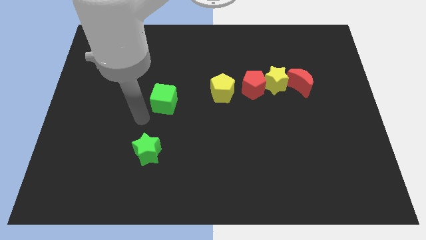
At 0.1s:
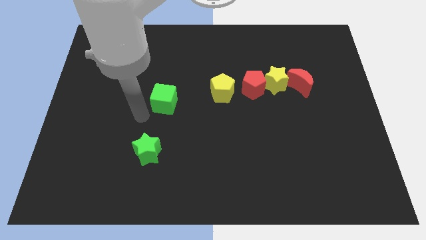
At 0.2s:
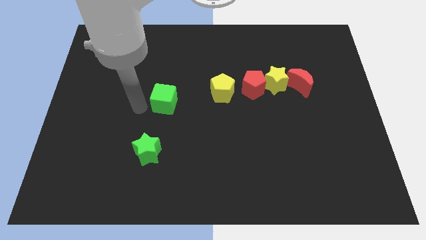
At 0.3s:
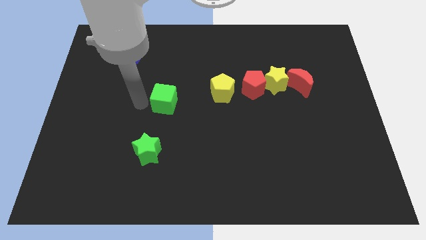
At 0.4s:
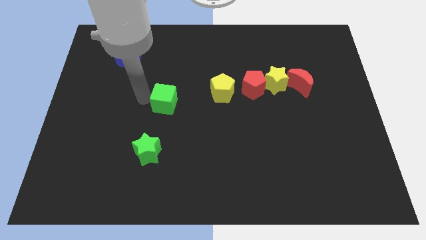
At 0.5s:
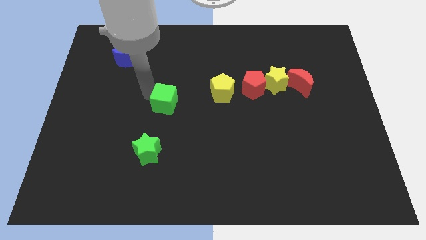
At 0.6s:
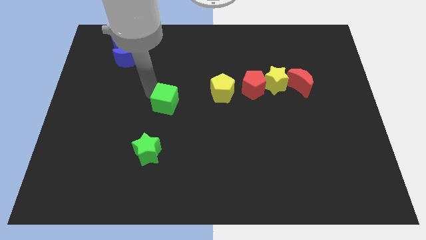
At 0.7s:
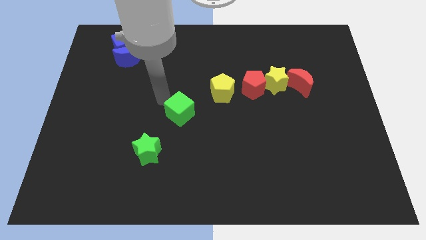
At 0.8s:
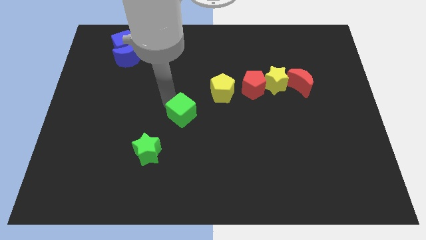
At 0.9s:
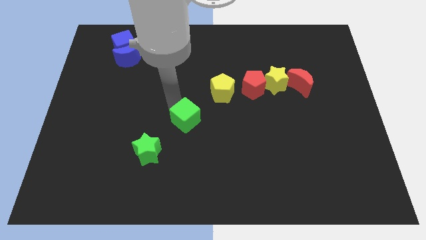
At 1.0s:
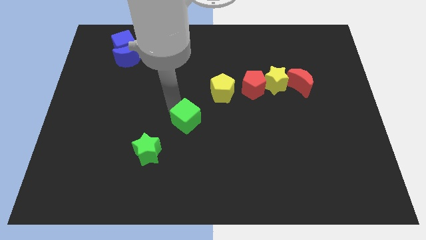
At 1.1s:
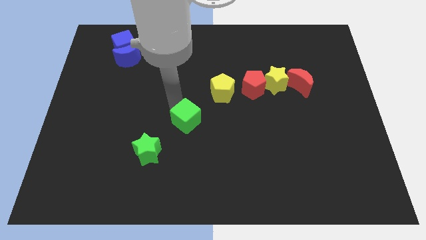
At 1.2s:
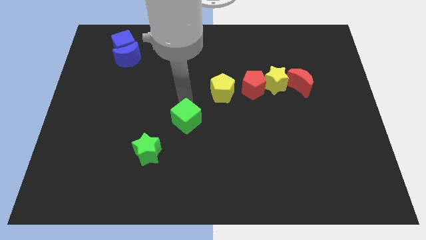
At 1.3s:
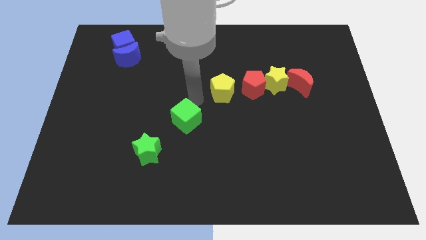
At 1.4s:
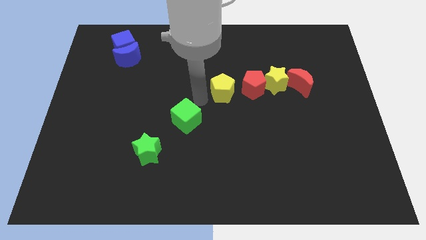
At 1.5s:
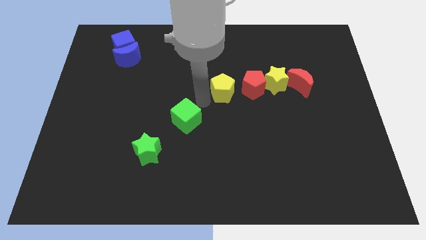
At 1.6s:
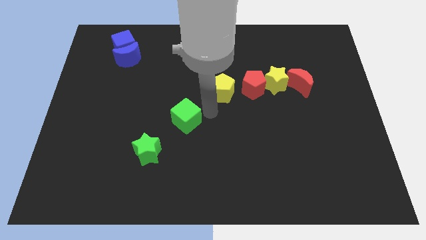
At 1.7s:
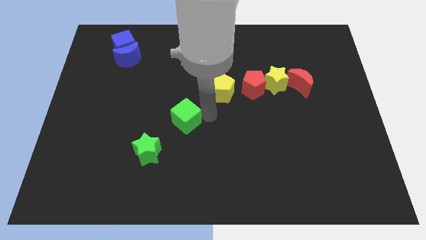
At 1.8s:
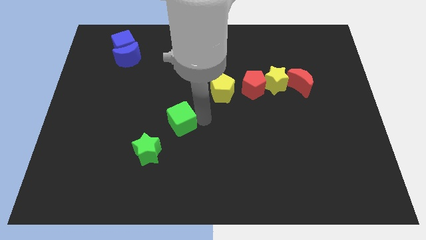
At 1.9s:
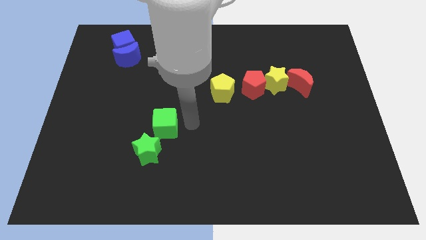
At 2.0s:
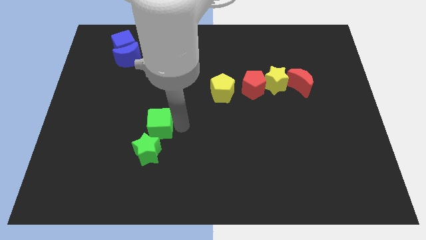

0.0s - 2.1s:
push the green cube close to the green star

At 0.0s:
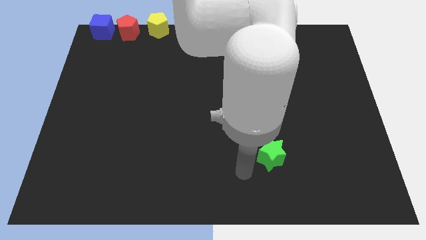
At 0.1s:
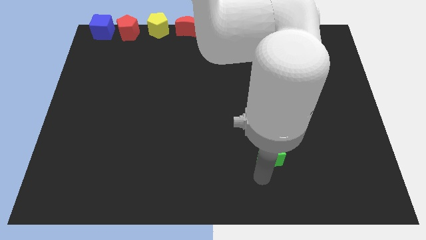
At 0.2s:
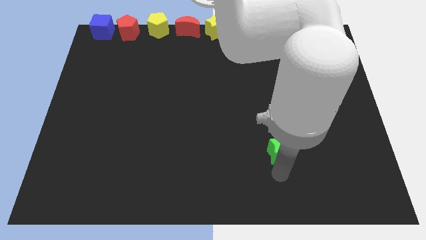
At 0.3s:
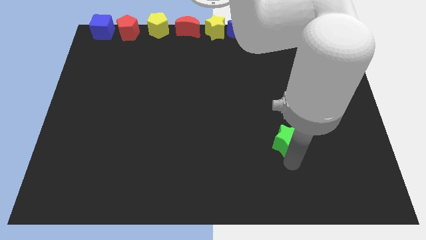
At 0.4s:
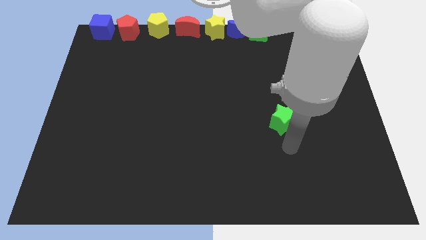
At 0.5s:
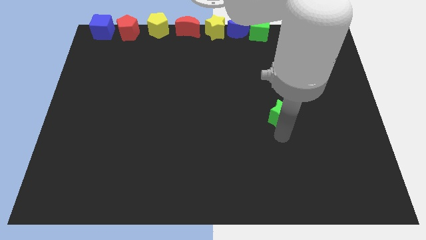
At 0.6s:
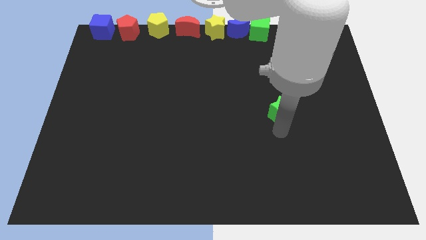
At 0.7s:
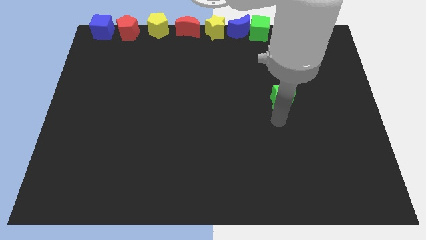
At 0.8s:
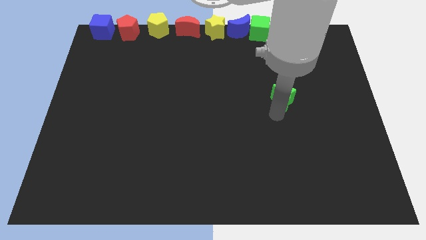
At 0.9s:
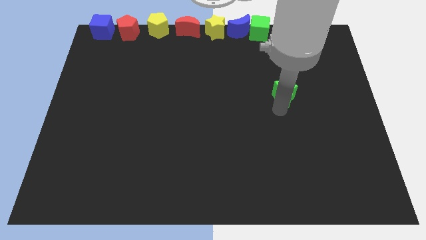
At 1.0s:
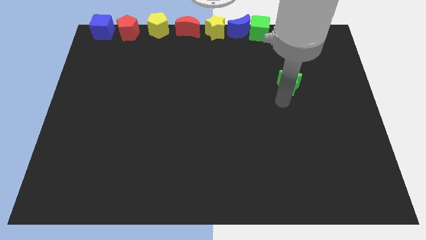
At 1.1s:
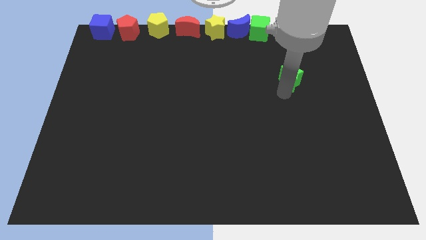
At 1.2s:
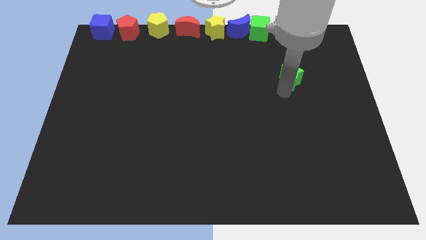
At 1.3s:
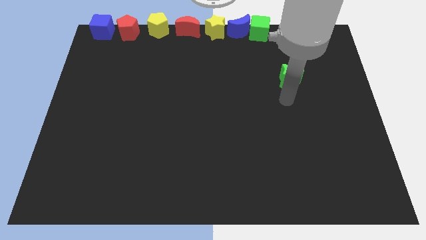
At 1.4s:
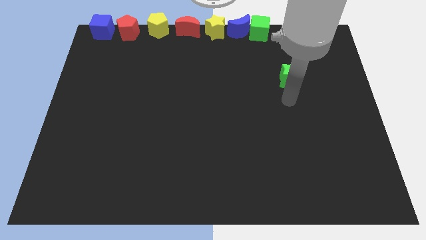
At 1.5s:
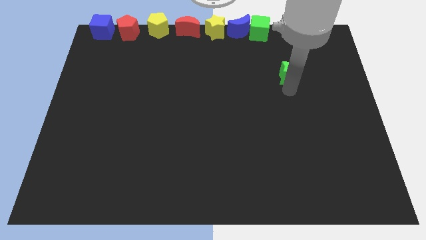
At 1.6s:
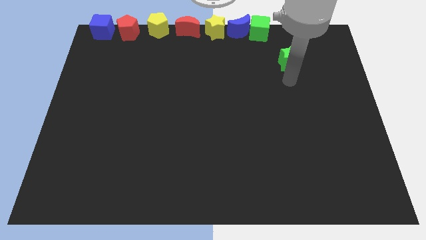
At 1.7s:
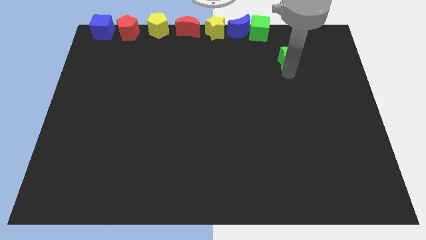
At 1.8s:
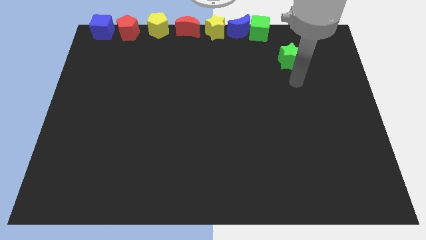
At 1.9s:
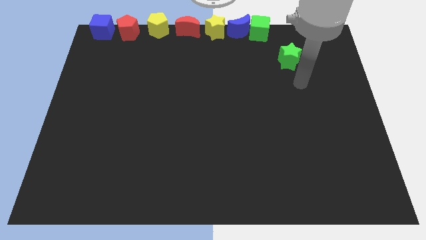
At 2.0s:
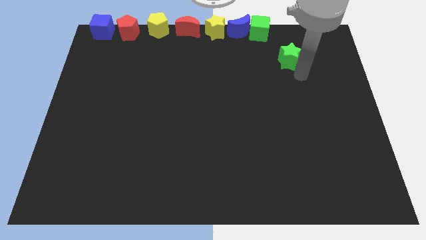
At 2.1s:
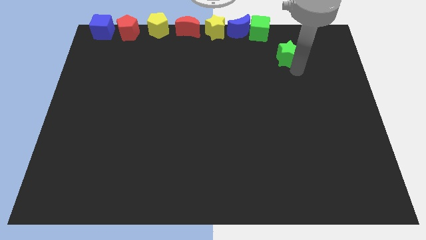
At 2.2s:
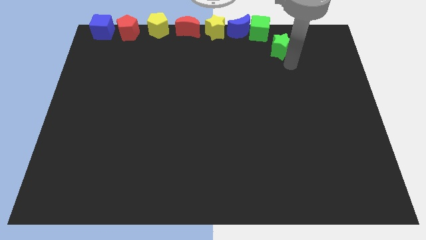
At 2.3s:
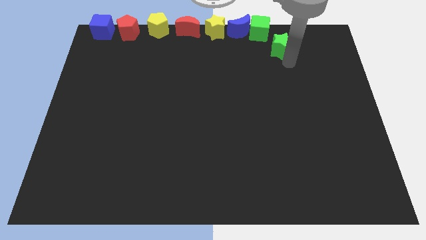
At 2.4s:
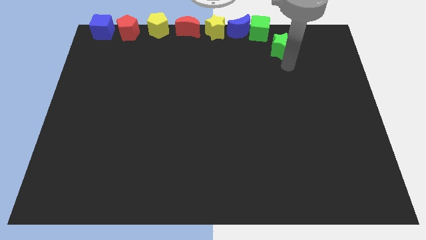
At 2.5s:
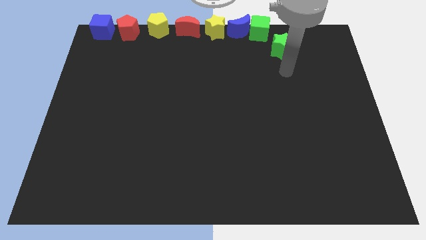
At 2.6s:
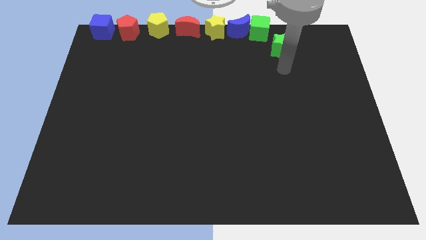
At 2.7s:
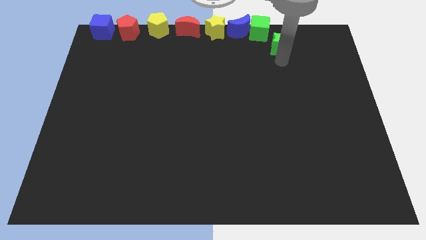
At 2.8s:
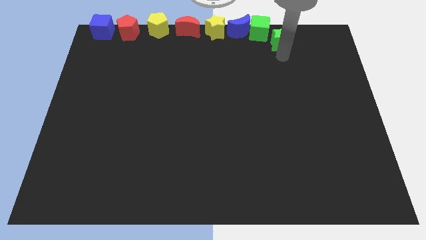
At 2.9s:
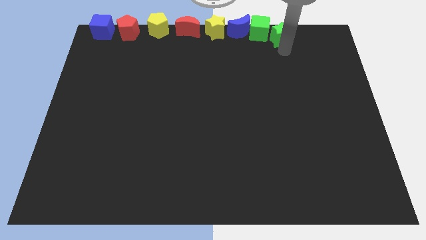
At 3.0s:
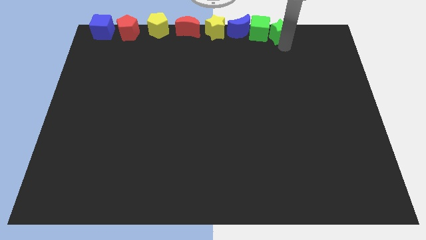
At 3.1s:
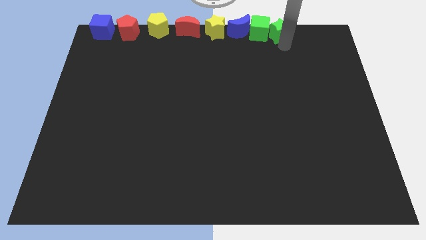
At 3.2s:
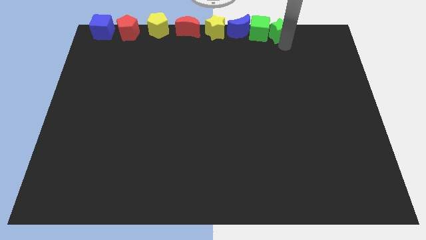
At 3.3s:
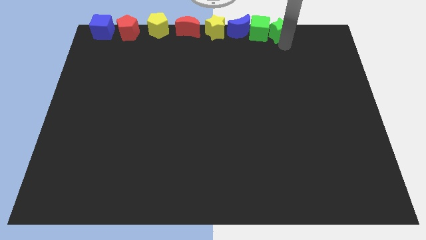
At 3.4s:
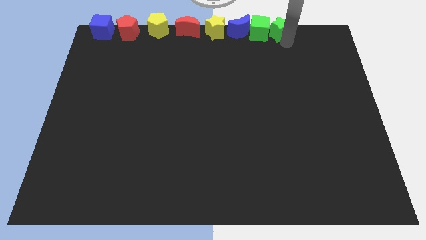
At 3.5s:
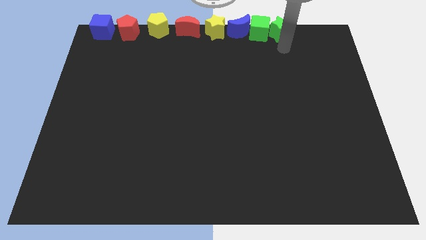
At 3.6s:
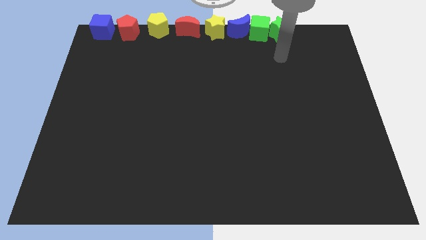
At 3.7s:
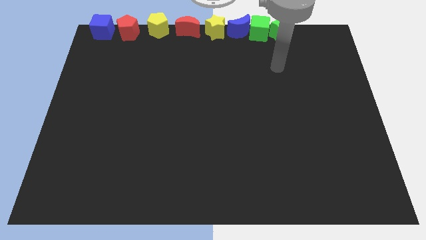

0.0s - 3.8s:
place the green star right to the green cube

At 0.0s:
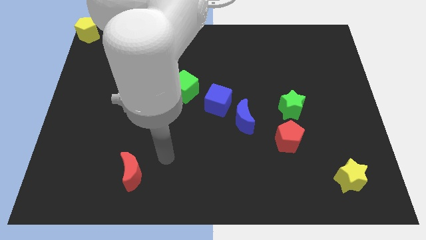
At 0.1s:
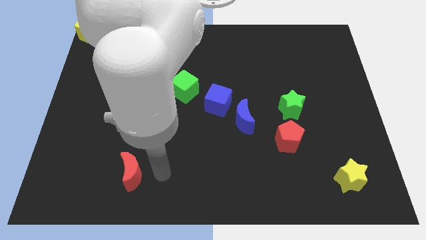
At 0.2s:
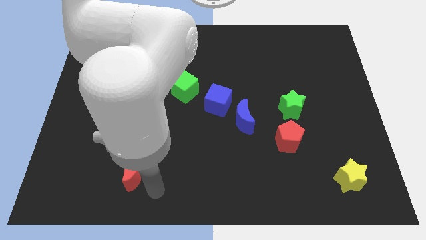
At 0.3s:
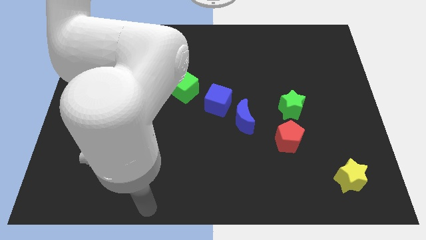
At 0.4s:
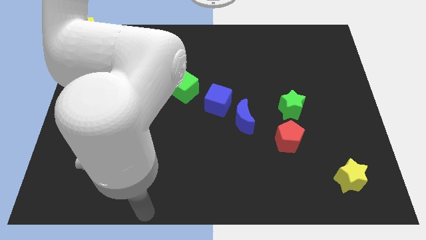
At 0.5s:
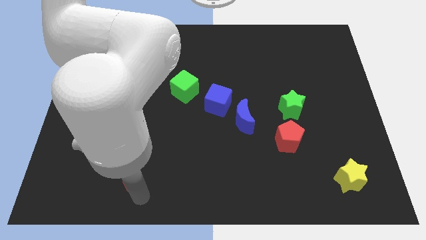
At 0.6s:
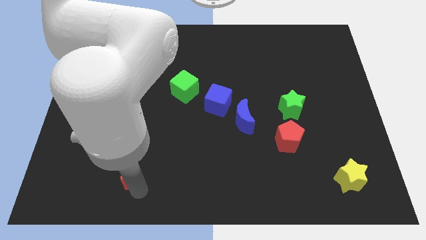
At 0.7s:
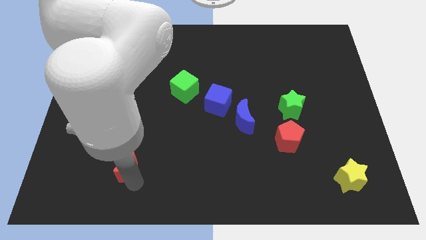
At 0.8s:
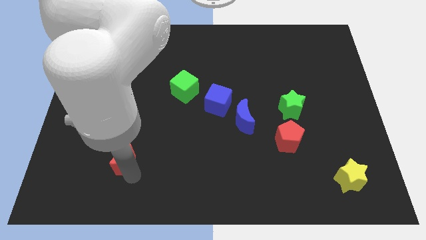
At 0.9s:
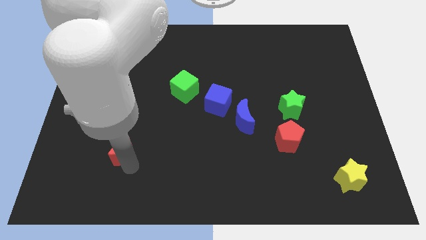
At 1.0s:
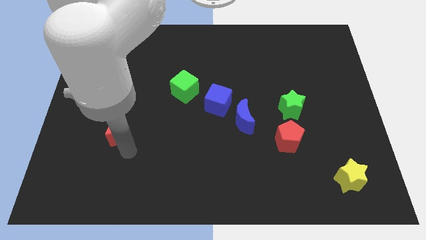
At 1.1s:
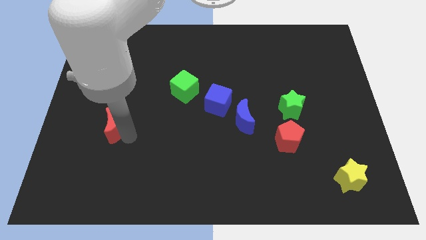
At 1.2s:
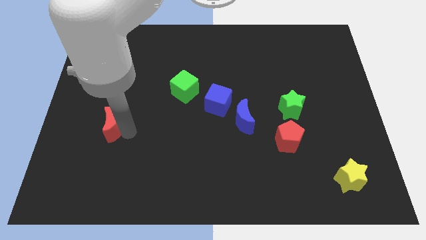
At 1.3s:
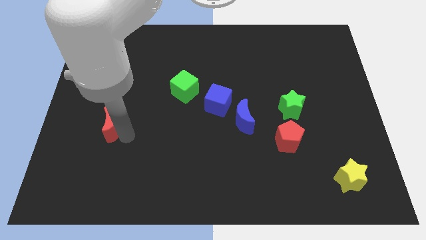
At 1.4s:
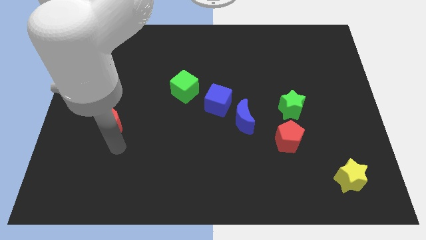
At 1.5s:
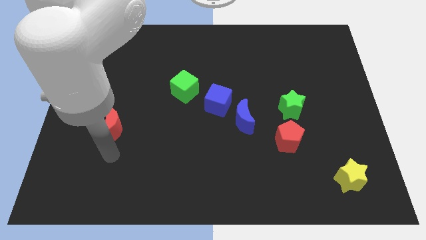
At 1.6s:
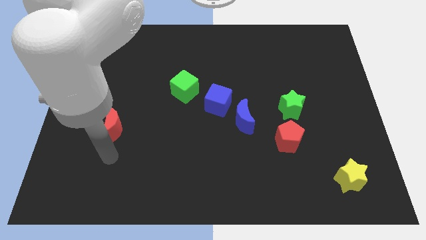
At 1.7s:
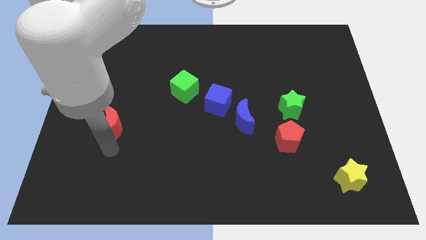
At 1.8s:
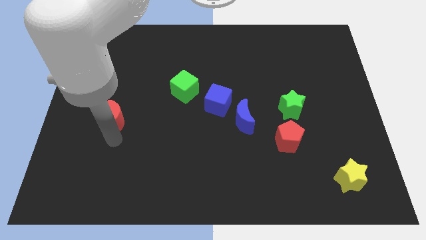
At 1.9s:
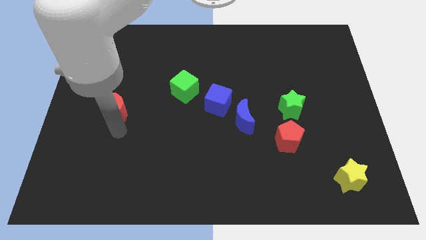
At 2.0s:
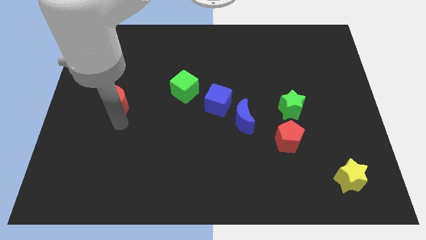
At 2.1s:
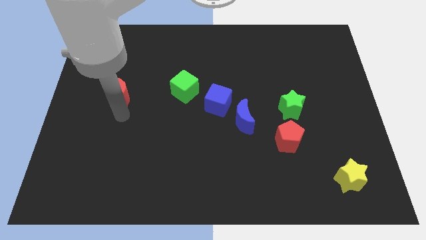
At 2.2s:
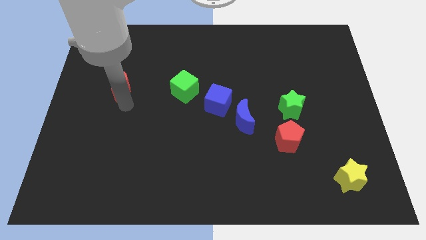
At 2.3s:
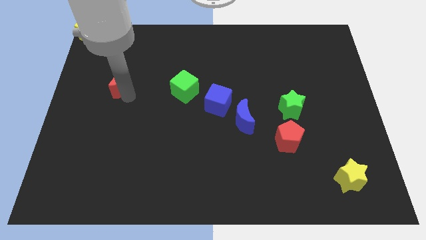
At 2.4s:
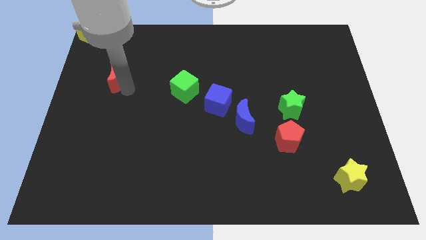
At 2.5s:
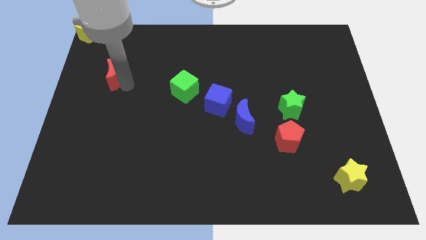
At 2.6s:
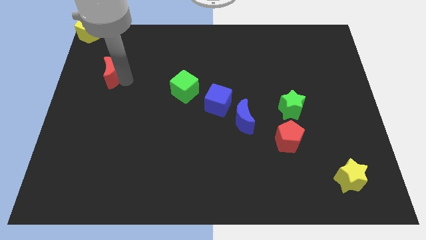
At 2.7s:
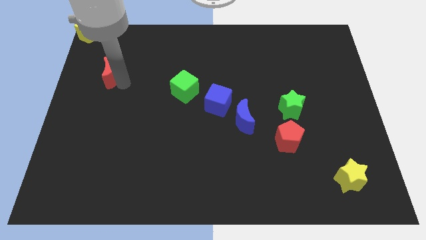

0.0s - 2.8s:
move the red crescent at the bottom right side of the yellow pentagon

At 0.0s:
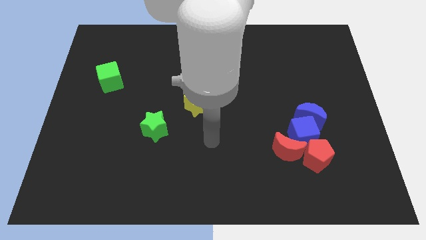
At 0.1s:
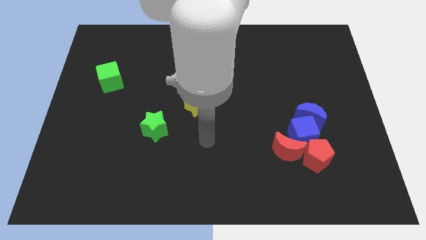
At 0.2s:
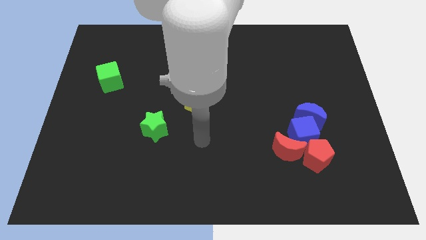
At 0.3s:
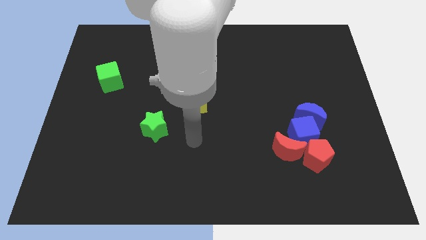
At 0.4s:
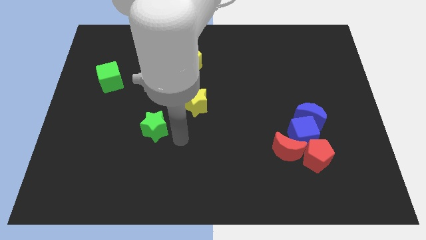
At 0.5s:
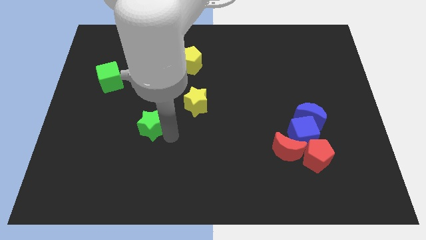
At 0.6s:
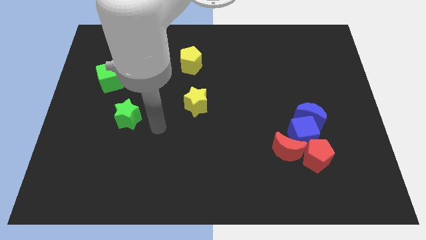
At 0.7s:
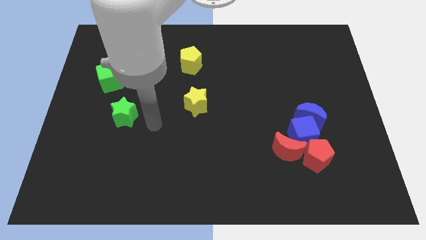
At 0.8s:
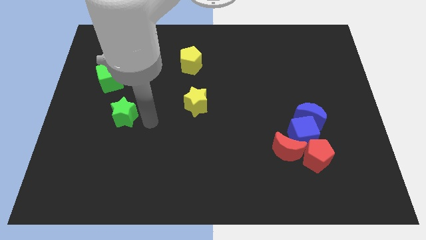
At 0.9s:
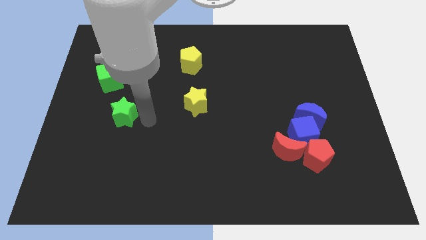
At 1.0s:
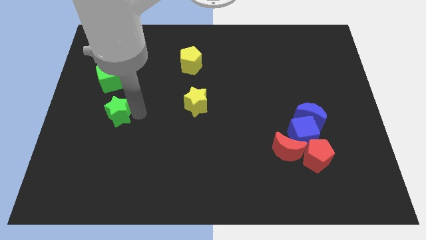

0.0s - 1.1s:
move the green star to the left of the board
